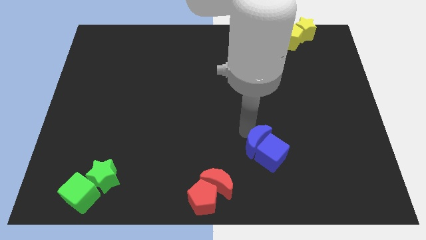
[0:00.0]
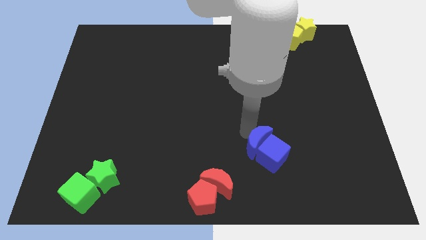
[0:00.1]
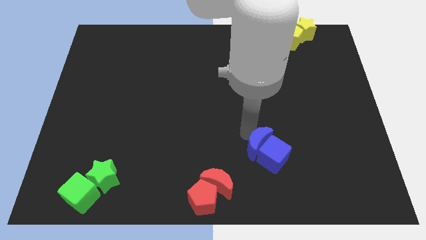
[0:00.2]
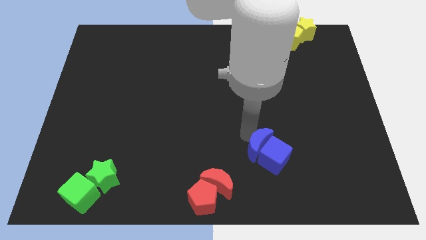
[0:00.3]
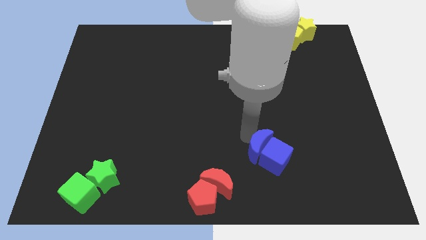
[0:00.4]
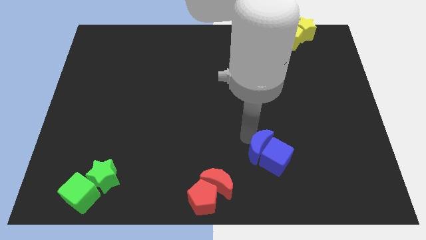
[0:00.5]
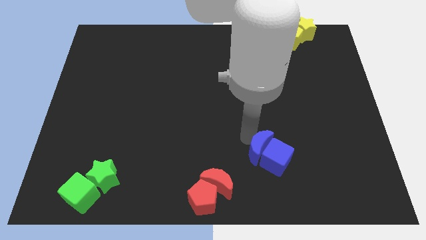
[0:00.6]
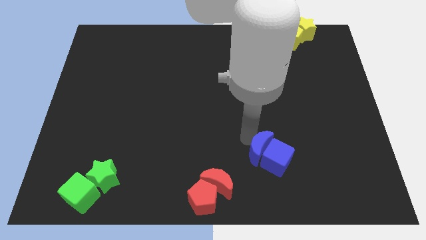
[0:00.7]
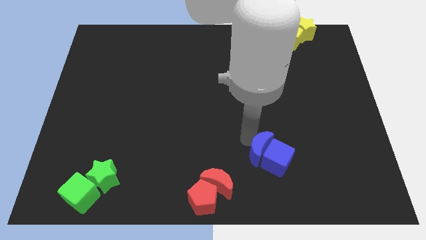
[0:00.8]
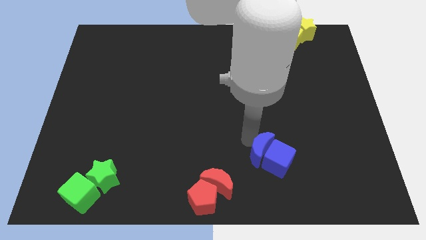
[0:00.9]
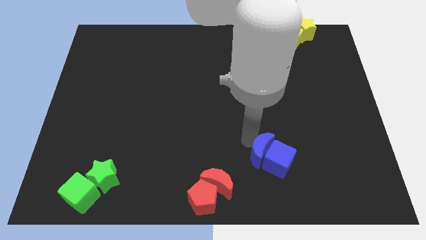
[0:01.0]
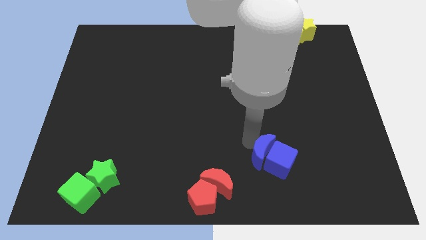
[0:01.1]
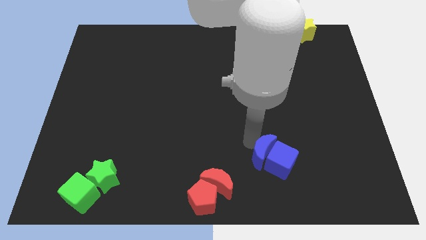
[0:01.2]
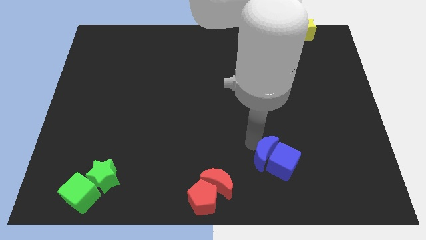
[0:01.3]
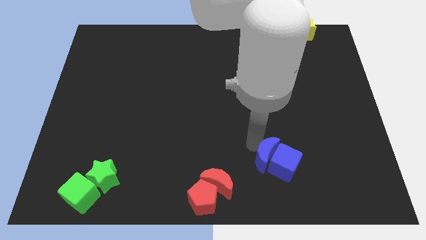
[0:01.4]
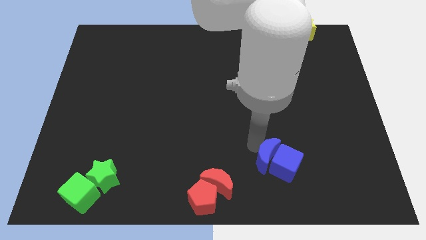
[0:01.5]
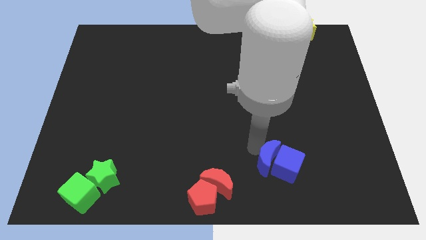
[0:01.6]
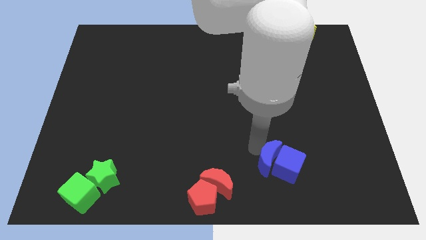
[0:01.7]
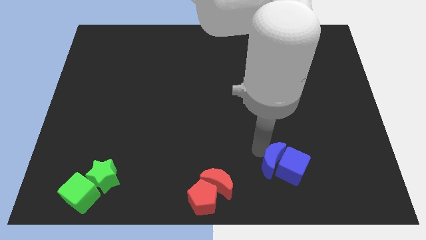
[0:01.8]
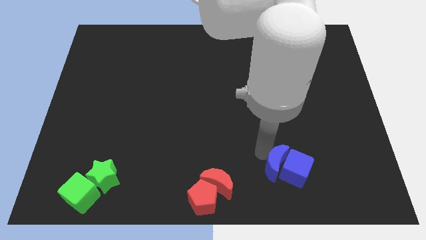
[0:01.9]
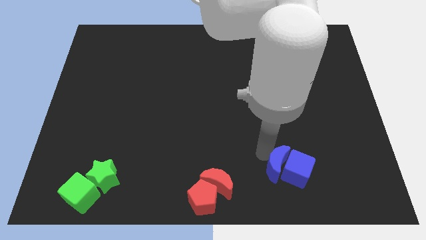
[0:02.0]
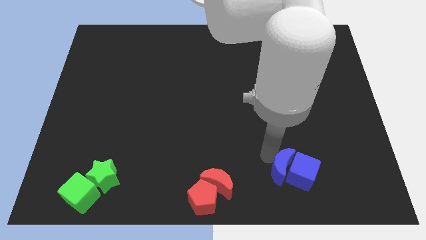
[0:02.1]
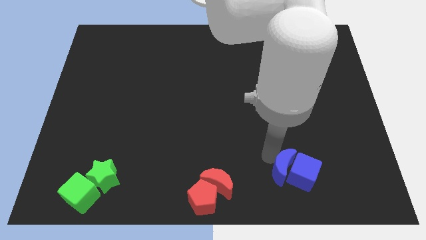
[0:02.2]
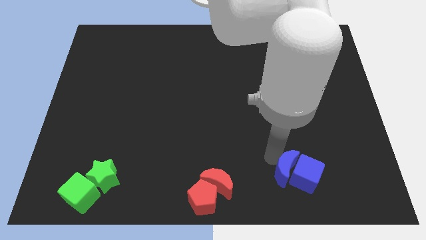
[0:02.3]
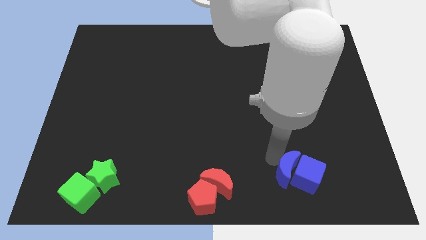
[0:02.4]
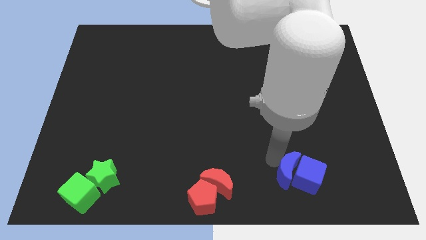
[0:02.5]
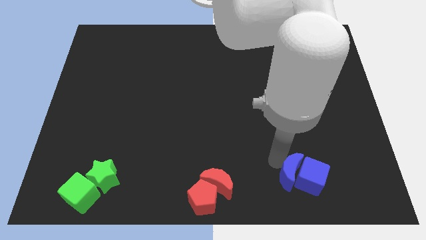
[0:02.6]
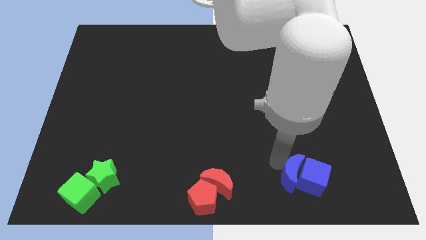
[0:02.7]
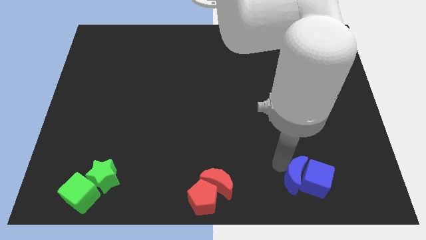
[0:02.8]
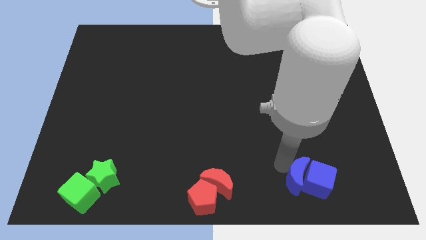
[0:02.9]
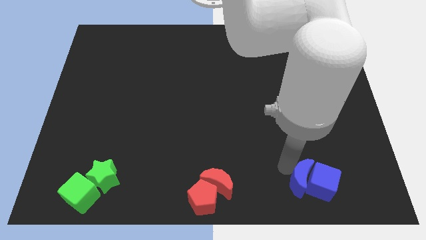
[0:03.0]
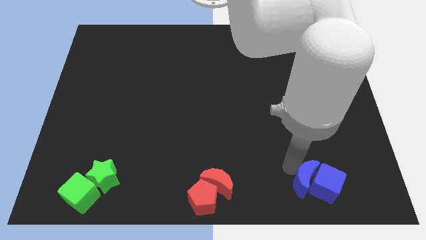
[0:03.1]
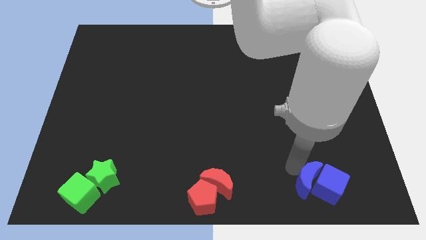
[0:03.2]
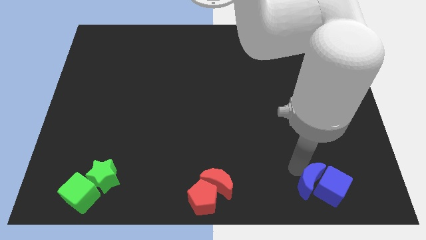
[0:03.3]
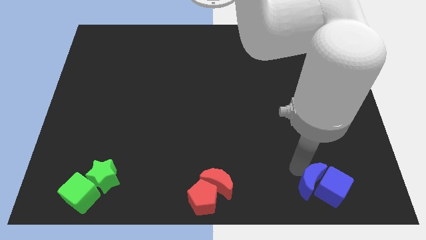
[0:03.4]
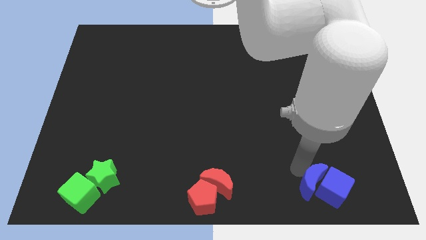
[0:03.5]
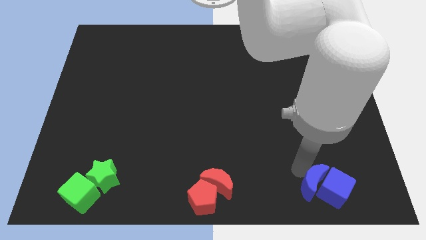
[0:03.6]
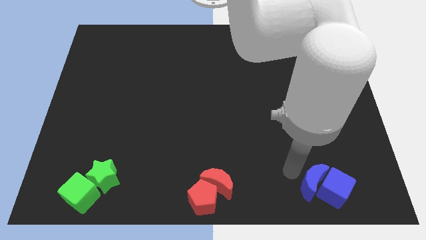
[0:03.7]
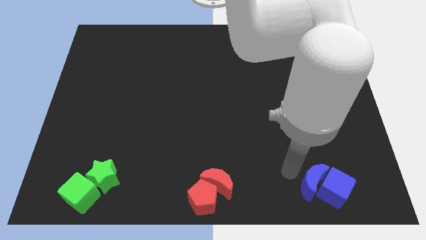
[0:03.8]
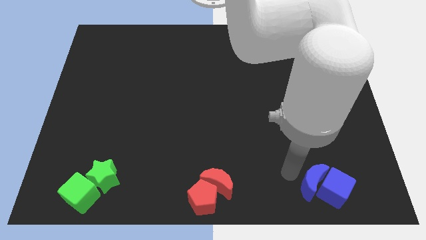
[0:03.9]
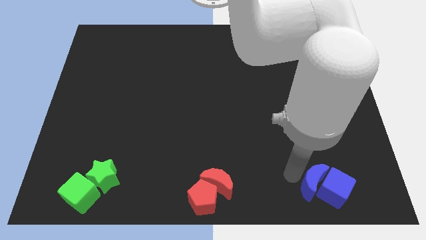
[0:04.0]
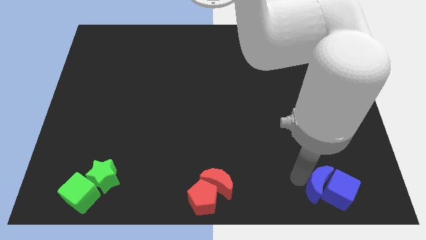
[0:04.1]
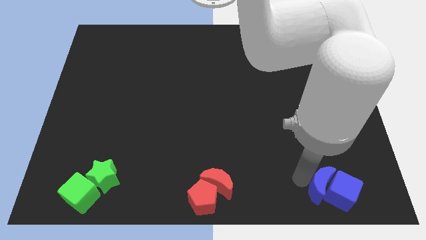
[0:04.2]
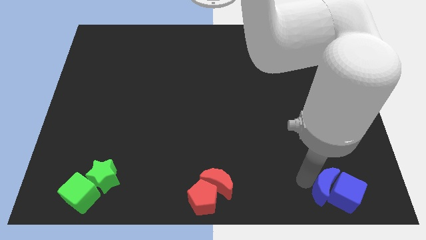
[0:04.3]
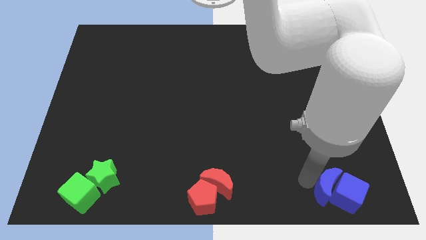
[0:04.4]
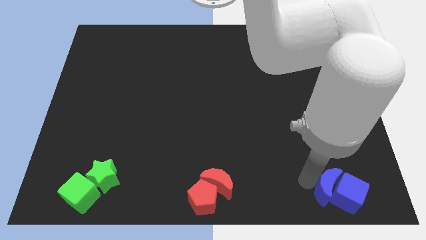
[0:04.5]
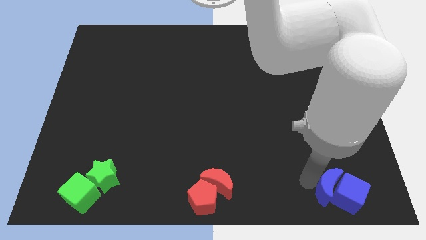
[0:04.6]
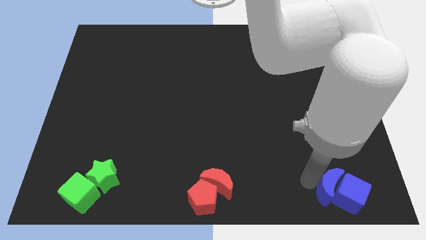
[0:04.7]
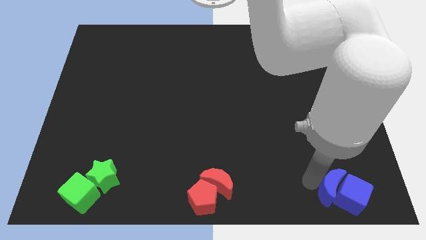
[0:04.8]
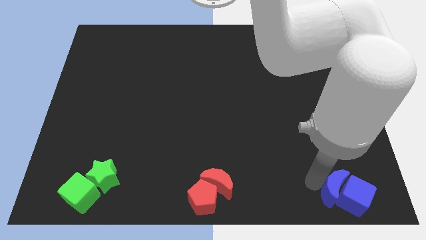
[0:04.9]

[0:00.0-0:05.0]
put the blue cube and blue crescent to the bottom right side of the board

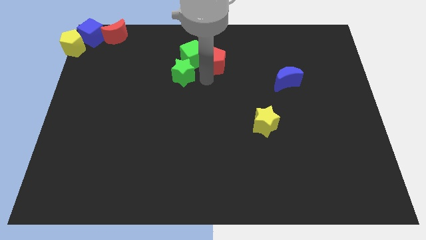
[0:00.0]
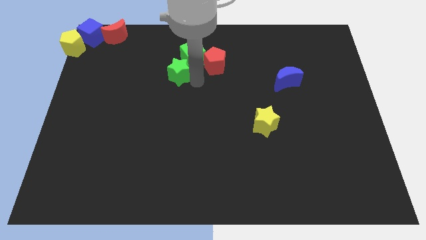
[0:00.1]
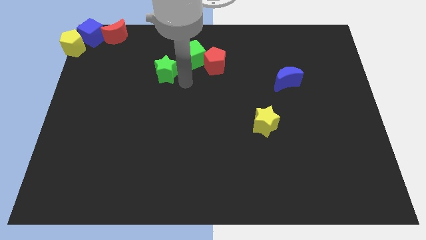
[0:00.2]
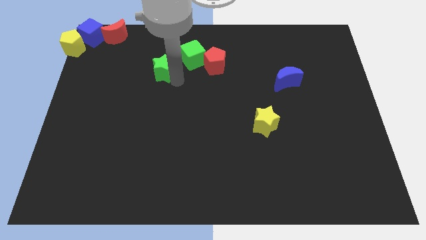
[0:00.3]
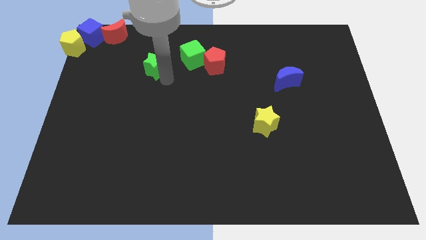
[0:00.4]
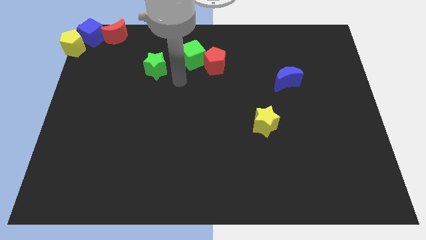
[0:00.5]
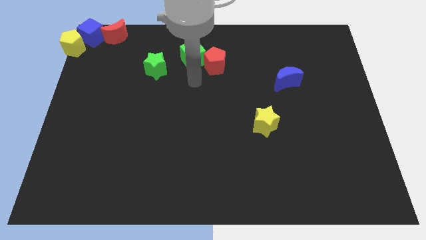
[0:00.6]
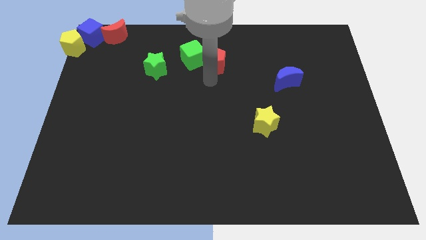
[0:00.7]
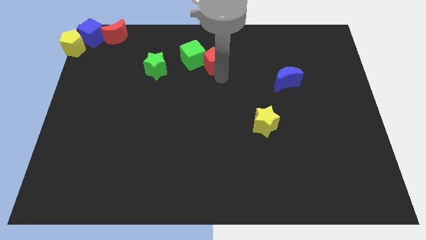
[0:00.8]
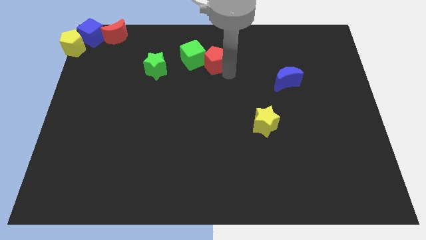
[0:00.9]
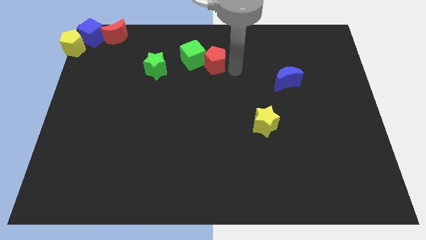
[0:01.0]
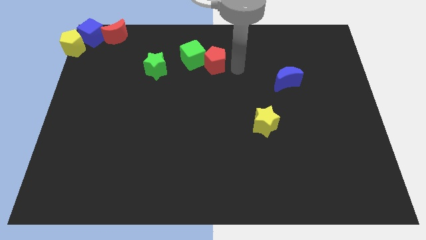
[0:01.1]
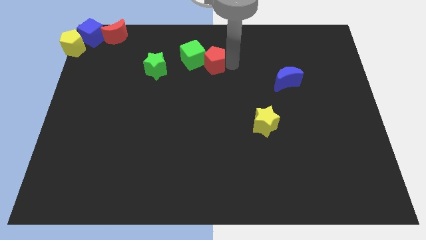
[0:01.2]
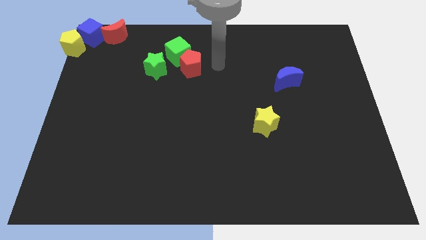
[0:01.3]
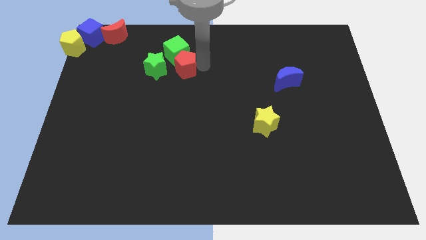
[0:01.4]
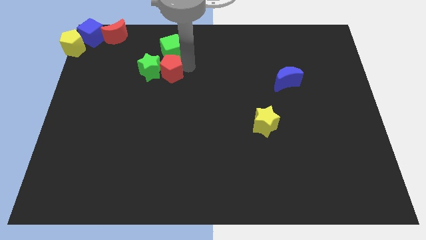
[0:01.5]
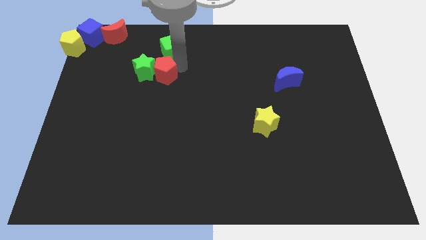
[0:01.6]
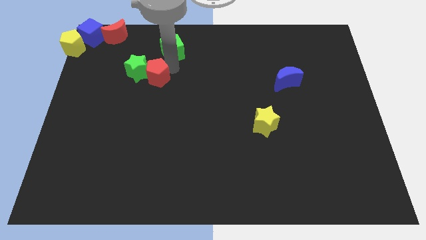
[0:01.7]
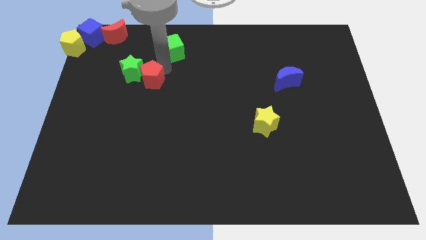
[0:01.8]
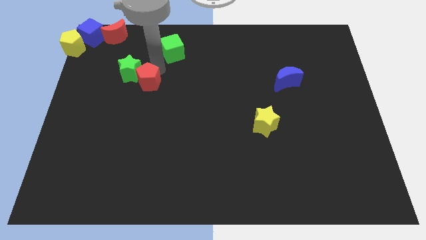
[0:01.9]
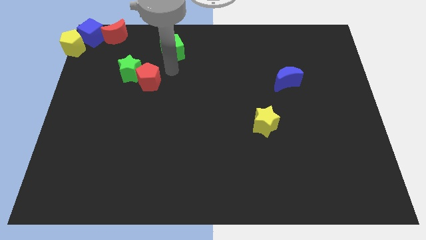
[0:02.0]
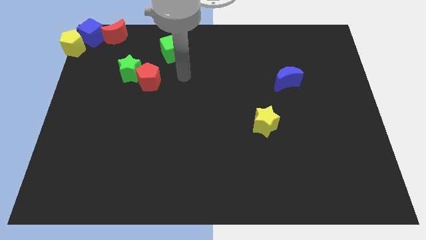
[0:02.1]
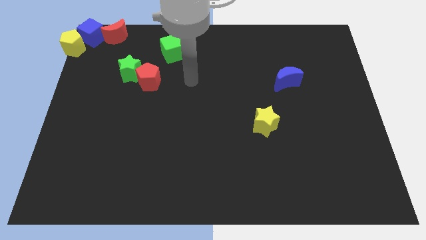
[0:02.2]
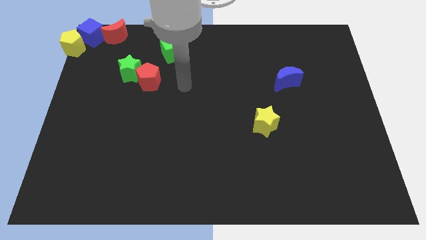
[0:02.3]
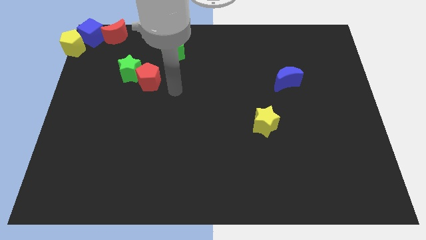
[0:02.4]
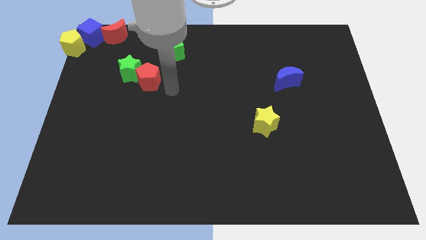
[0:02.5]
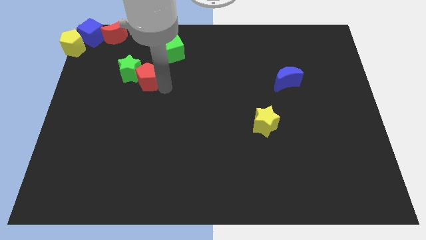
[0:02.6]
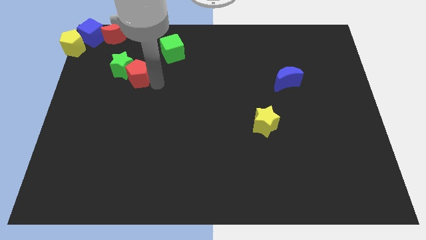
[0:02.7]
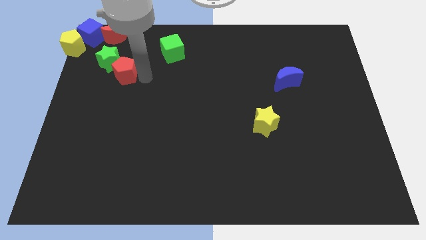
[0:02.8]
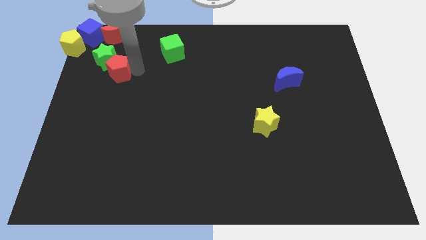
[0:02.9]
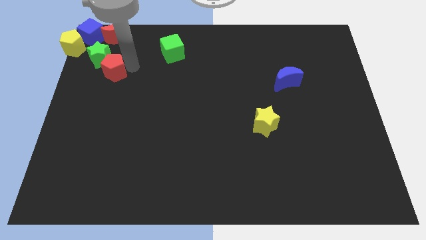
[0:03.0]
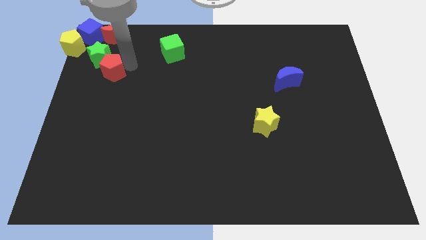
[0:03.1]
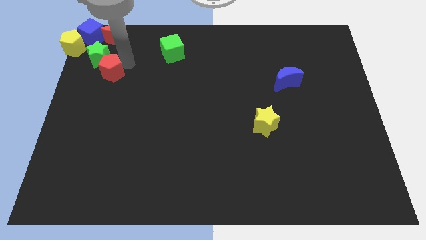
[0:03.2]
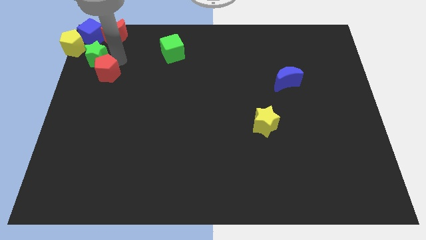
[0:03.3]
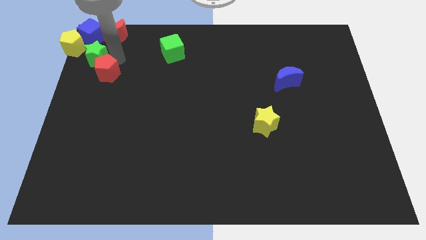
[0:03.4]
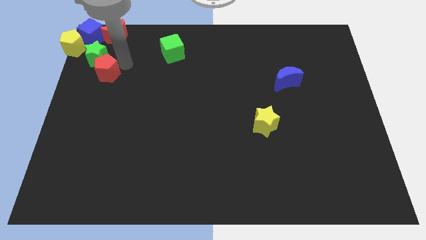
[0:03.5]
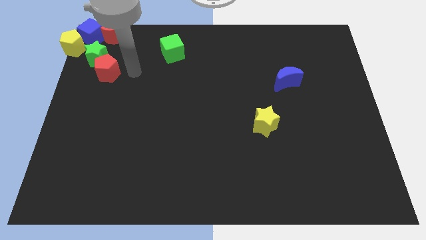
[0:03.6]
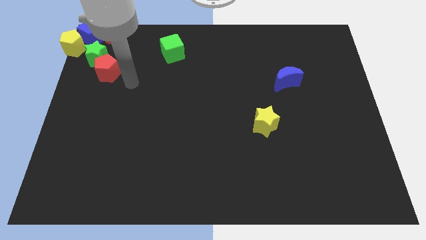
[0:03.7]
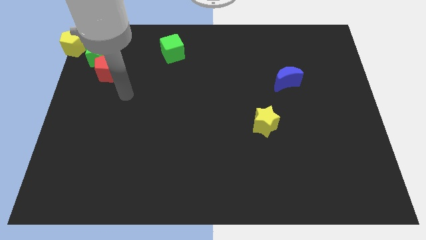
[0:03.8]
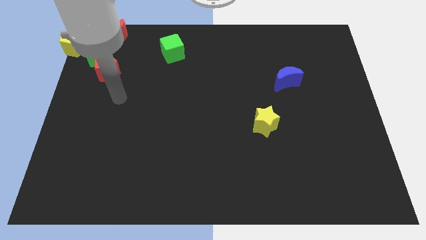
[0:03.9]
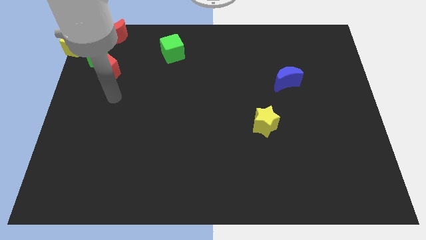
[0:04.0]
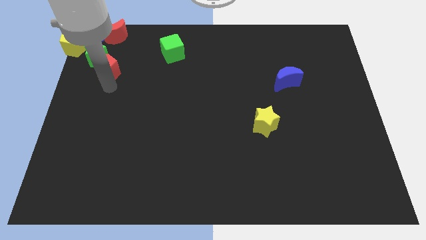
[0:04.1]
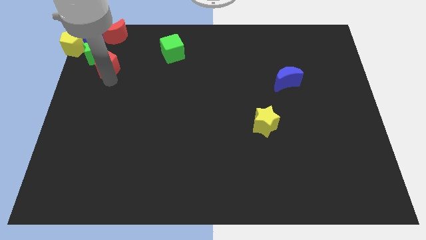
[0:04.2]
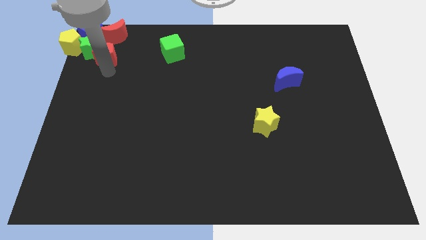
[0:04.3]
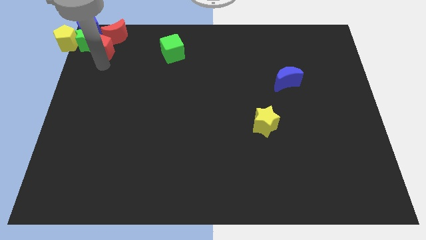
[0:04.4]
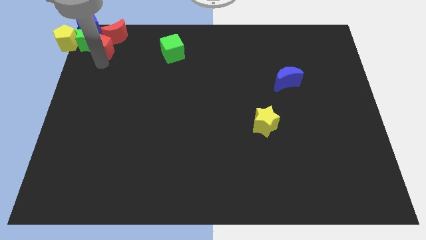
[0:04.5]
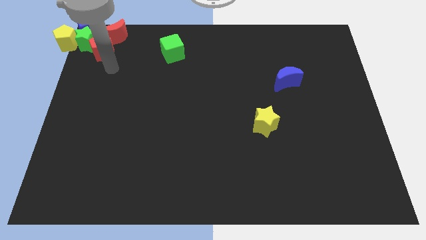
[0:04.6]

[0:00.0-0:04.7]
push the green star and red pentagon into a group of blocks
